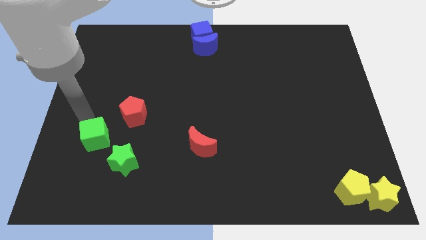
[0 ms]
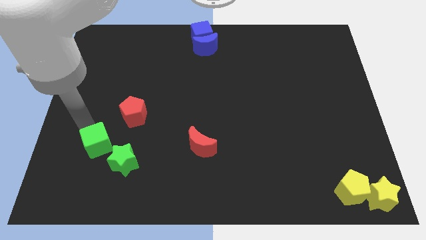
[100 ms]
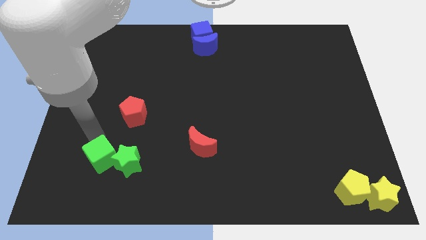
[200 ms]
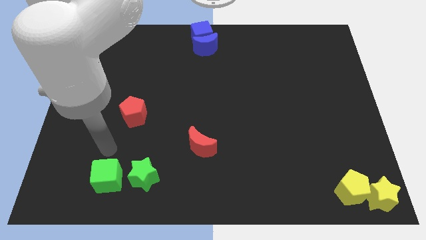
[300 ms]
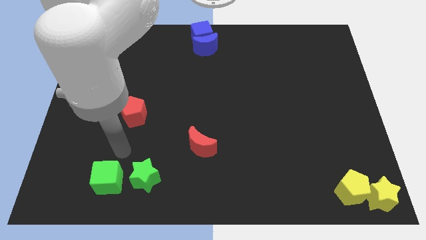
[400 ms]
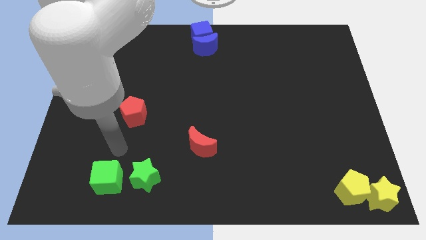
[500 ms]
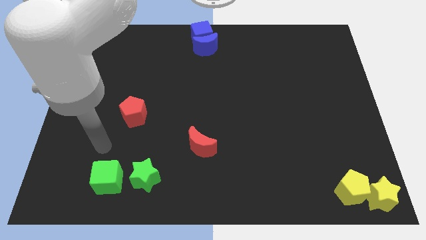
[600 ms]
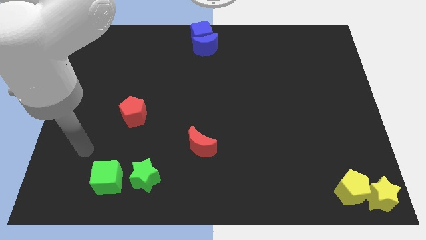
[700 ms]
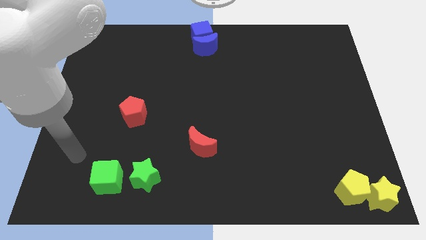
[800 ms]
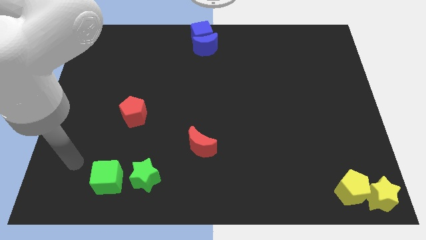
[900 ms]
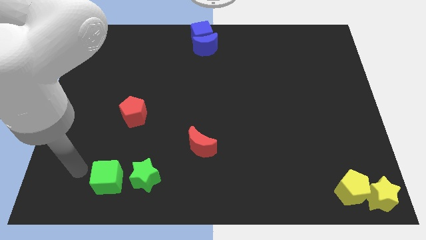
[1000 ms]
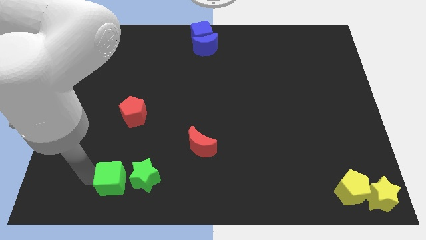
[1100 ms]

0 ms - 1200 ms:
drag the green cube slightly to the bottom

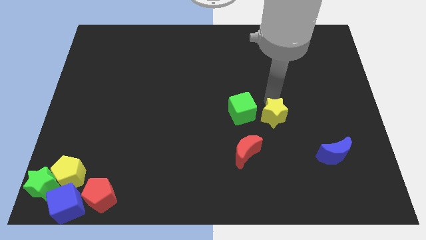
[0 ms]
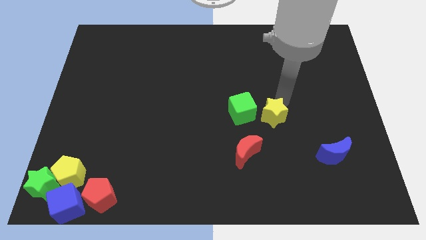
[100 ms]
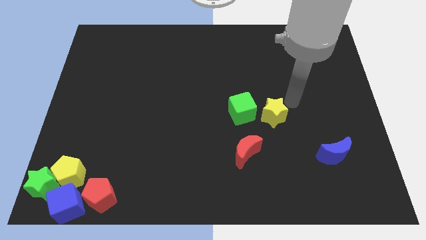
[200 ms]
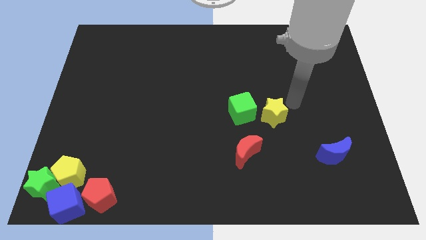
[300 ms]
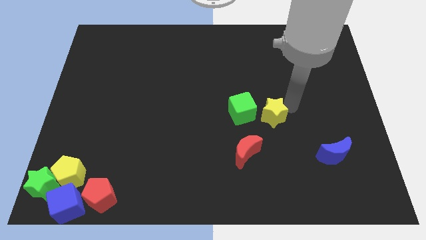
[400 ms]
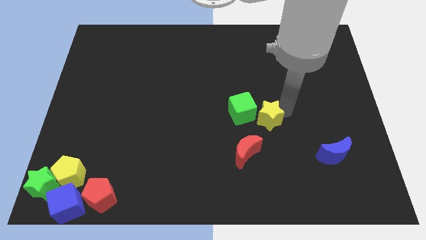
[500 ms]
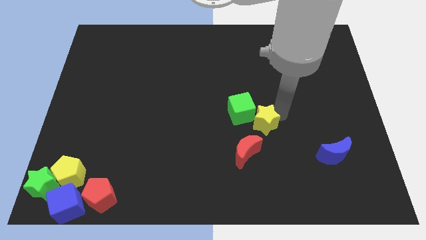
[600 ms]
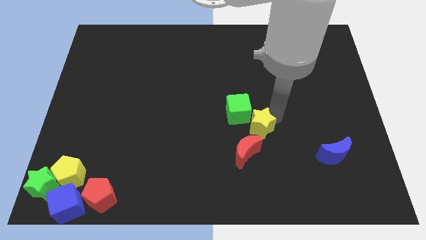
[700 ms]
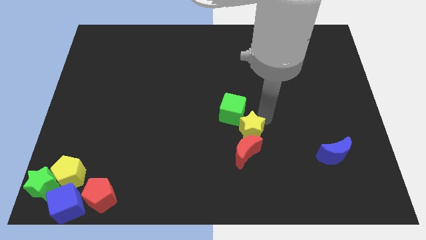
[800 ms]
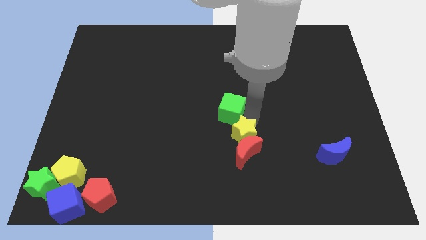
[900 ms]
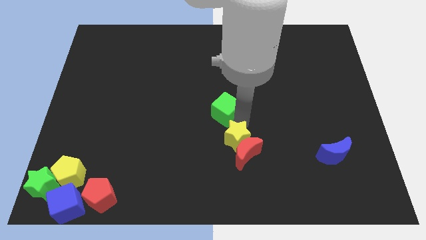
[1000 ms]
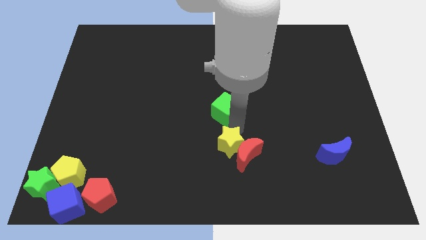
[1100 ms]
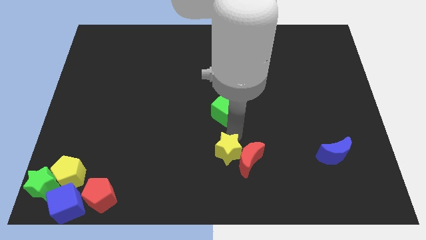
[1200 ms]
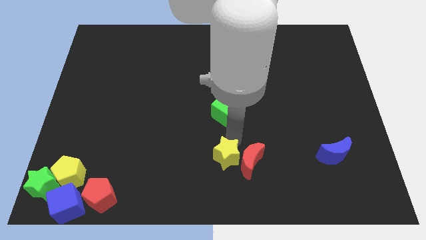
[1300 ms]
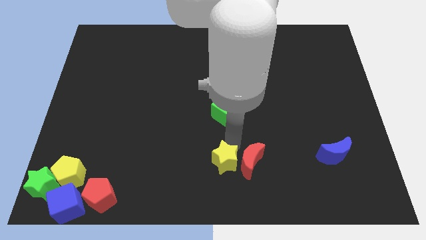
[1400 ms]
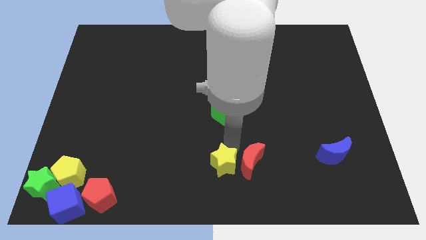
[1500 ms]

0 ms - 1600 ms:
move the yellow star to the left of the red crescent

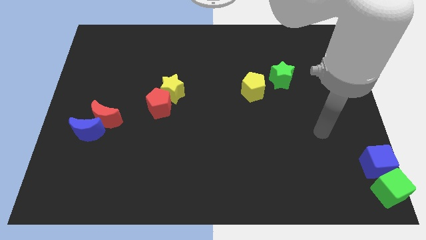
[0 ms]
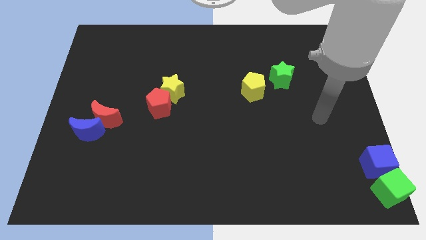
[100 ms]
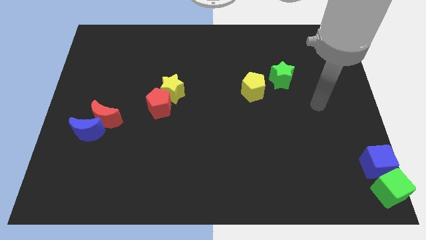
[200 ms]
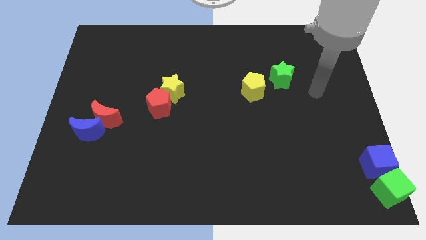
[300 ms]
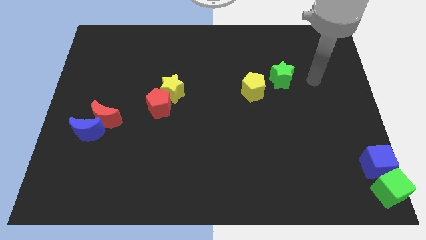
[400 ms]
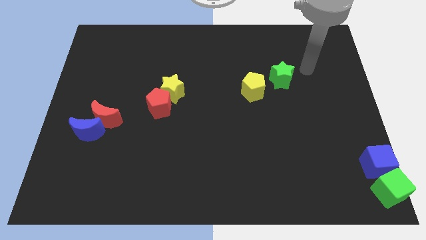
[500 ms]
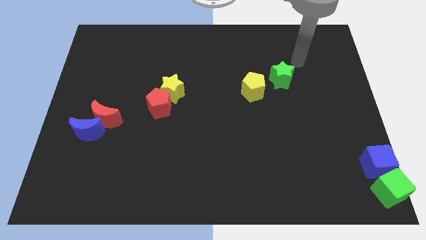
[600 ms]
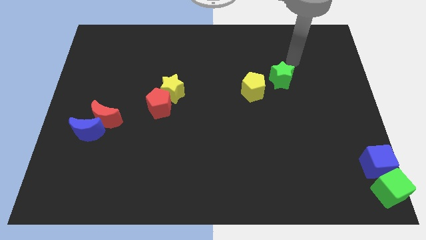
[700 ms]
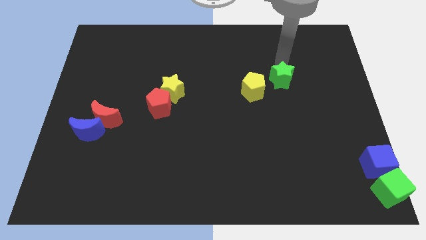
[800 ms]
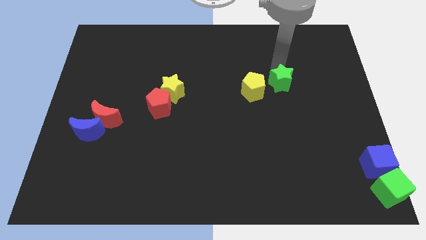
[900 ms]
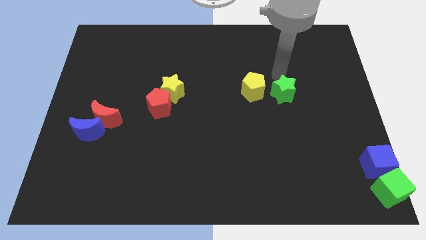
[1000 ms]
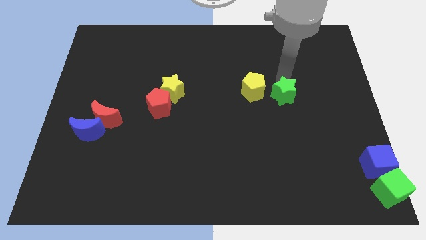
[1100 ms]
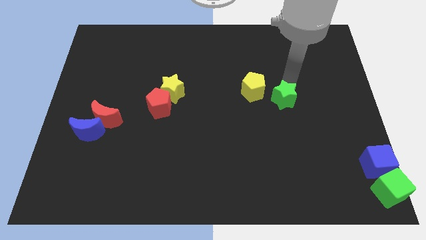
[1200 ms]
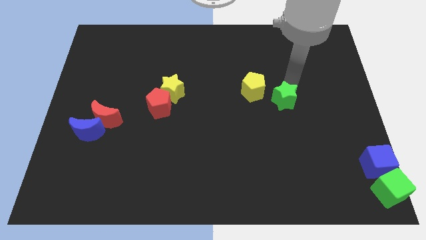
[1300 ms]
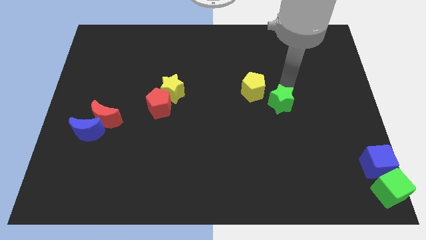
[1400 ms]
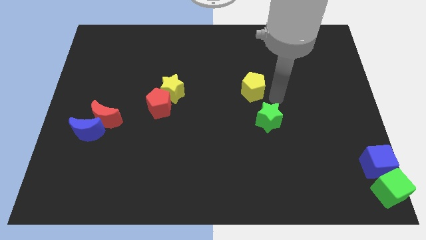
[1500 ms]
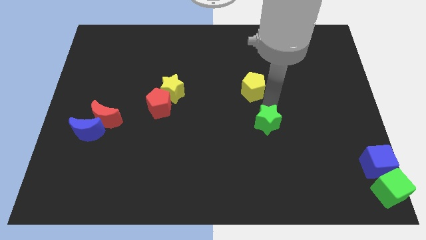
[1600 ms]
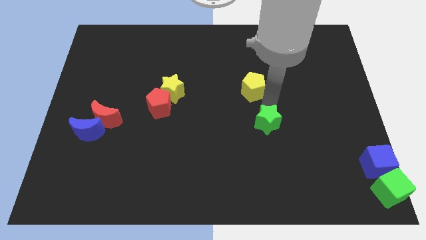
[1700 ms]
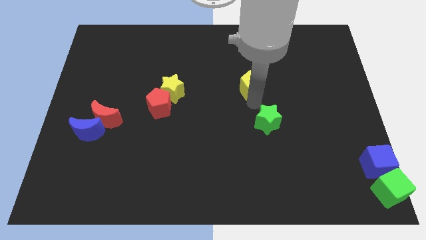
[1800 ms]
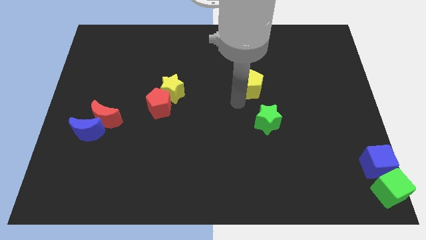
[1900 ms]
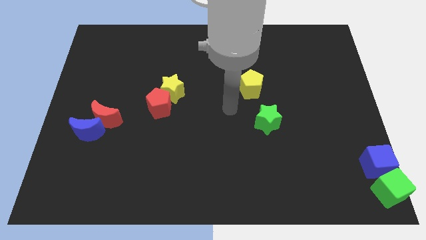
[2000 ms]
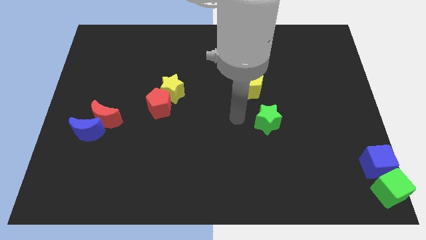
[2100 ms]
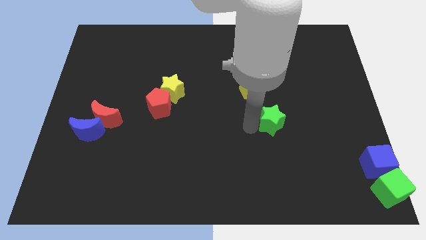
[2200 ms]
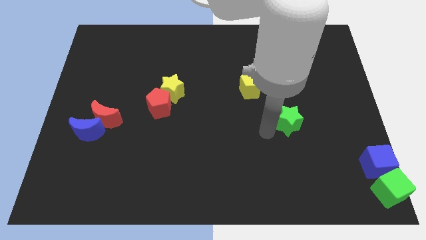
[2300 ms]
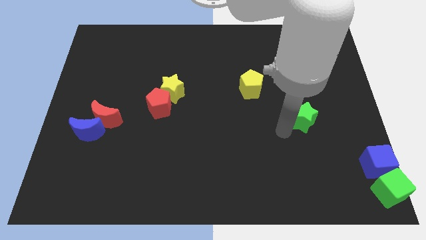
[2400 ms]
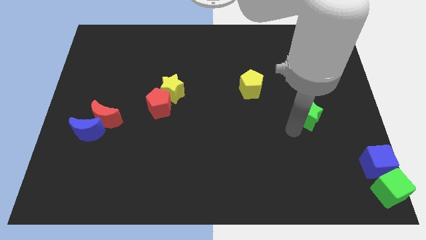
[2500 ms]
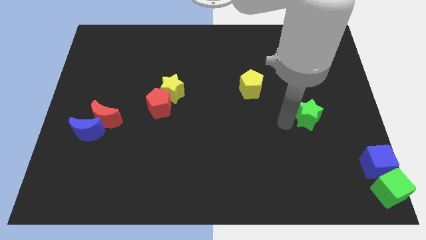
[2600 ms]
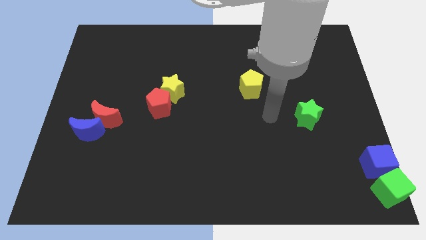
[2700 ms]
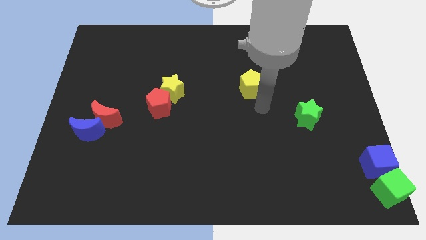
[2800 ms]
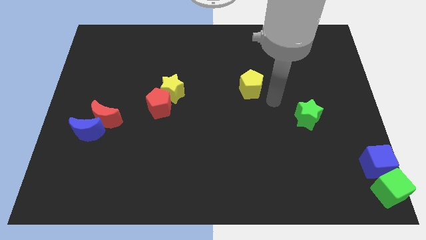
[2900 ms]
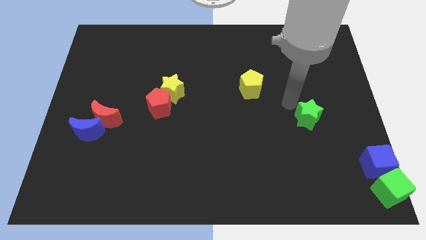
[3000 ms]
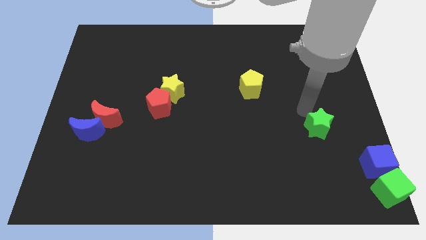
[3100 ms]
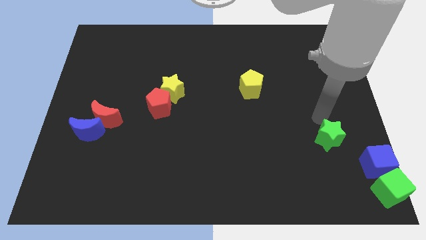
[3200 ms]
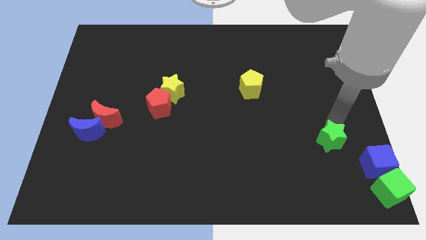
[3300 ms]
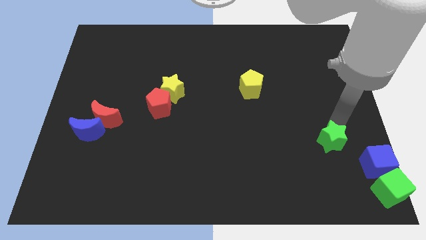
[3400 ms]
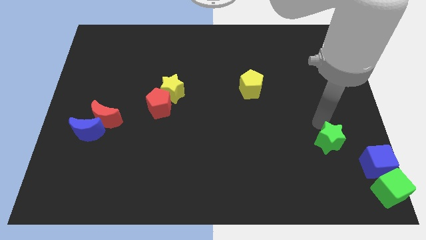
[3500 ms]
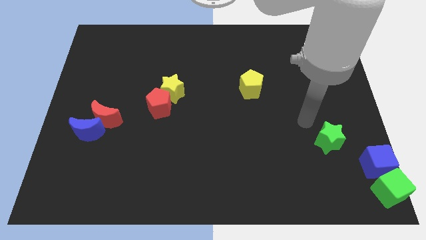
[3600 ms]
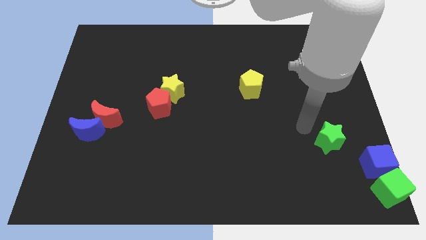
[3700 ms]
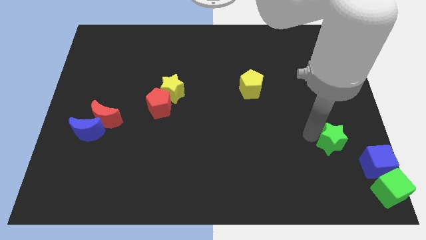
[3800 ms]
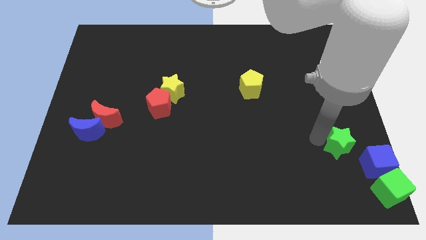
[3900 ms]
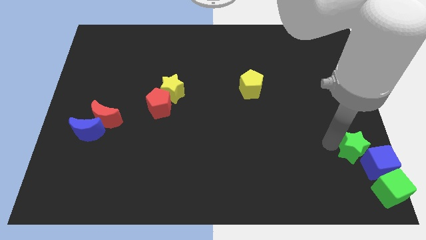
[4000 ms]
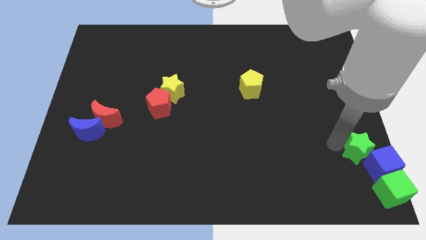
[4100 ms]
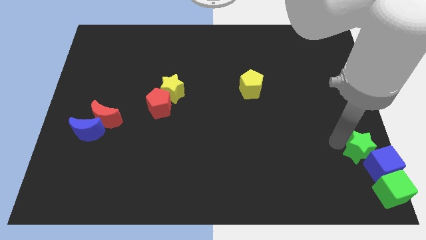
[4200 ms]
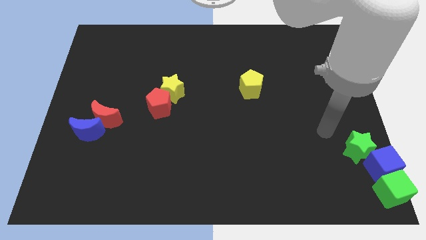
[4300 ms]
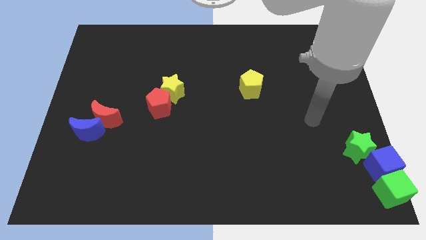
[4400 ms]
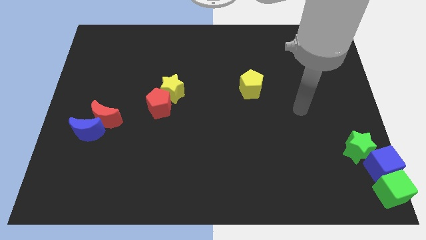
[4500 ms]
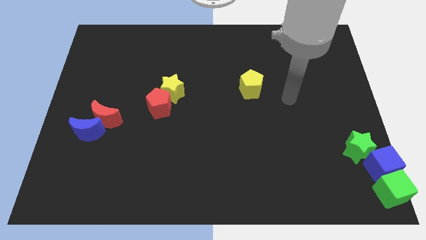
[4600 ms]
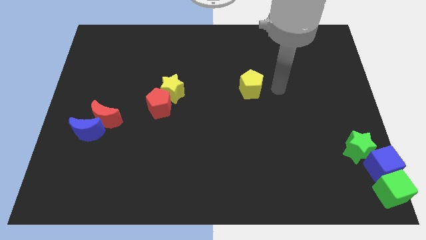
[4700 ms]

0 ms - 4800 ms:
push the green star to the top of the blue cube

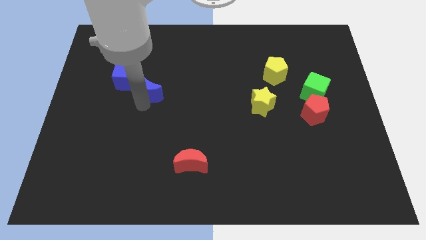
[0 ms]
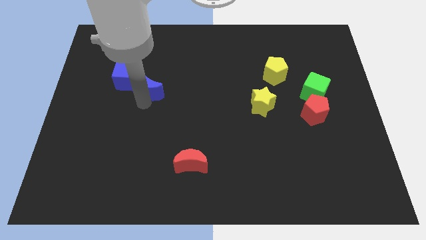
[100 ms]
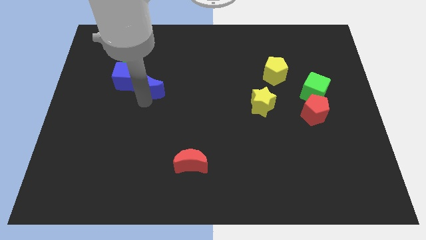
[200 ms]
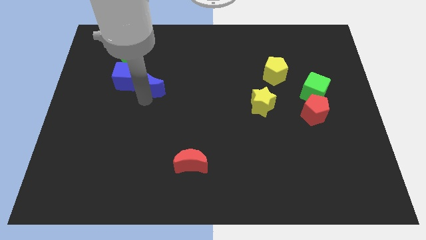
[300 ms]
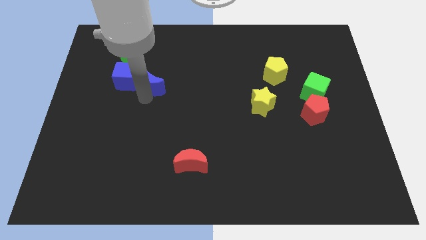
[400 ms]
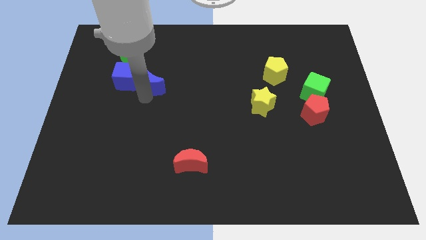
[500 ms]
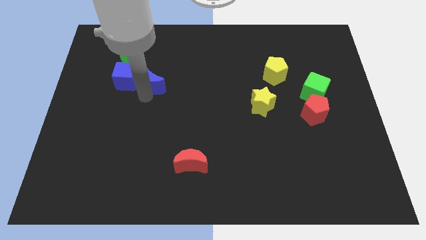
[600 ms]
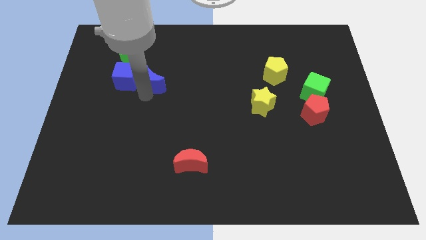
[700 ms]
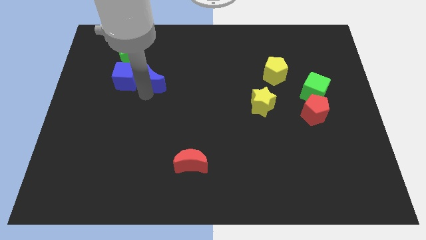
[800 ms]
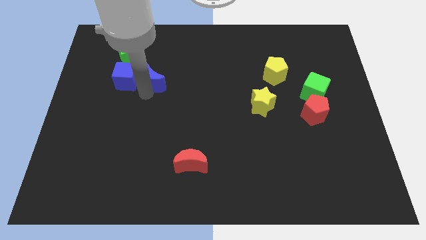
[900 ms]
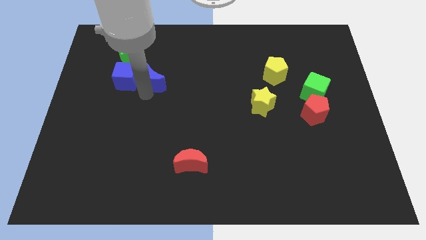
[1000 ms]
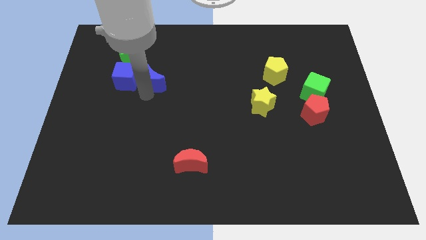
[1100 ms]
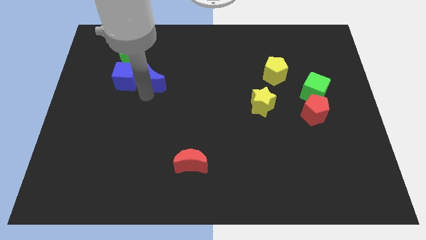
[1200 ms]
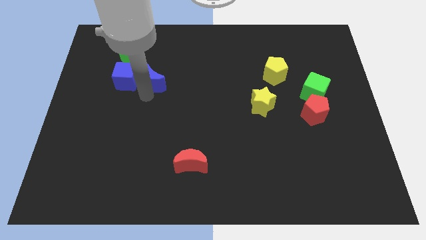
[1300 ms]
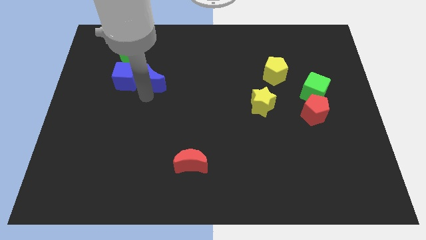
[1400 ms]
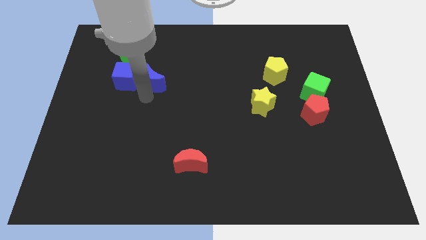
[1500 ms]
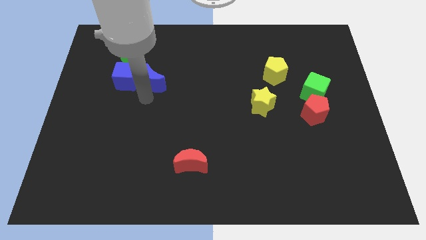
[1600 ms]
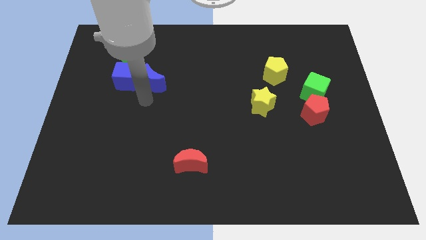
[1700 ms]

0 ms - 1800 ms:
place the blue moo to the right of the blue cube
